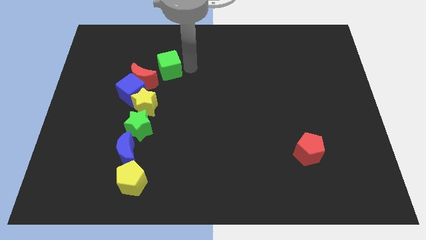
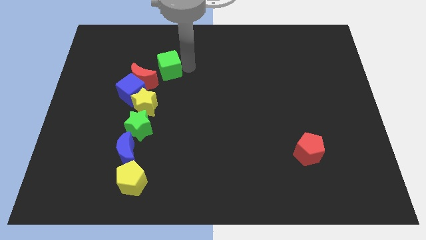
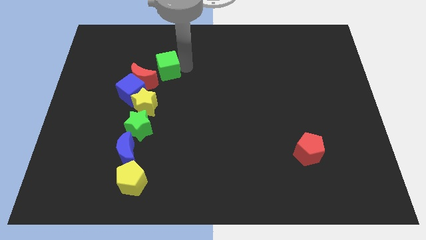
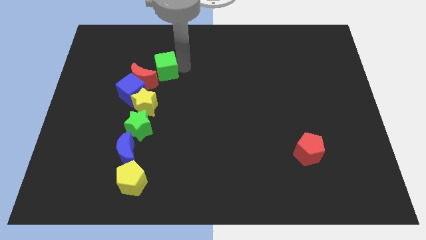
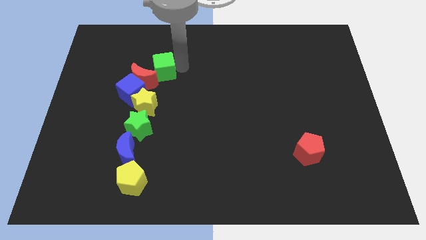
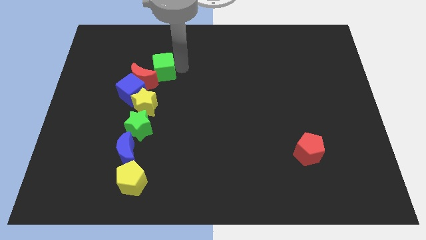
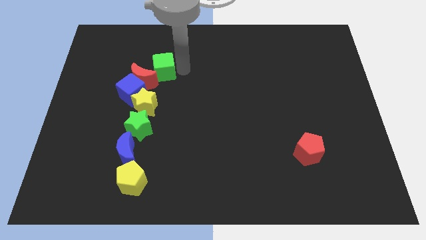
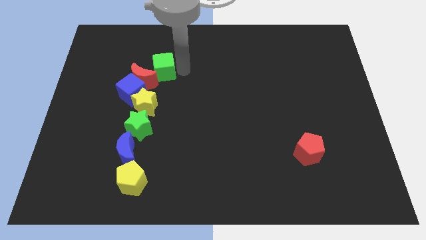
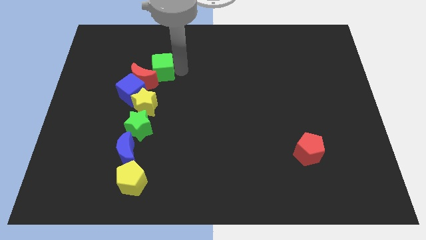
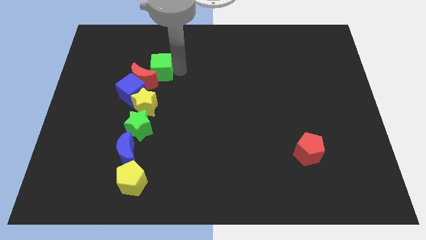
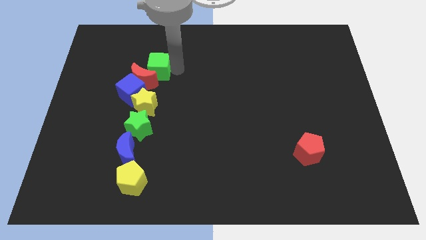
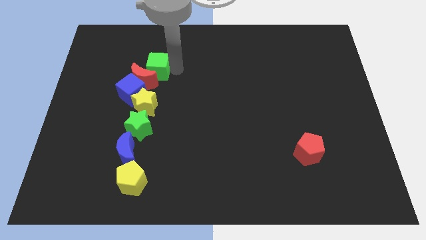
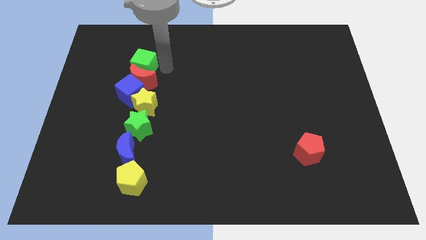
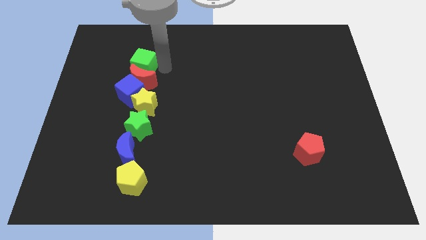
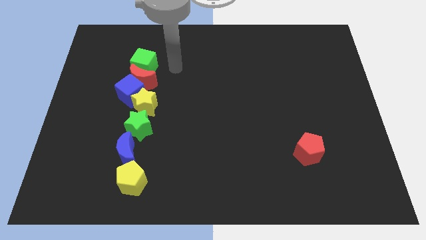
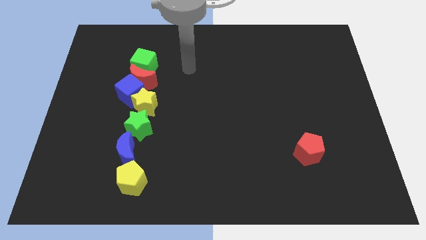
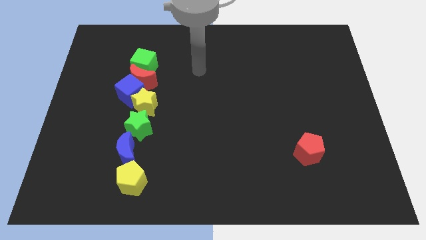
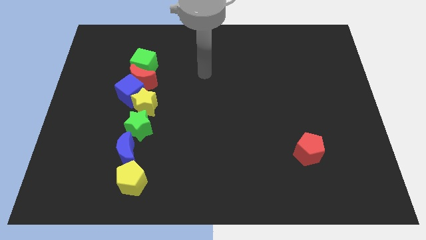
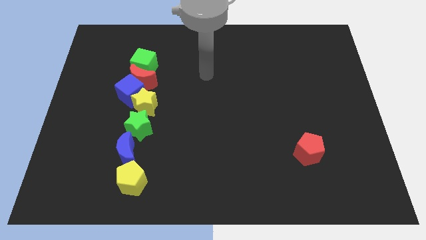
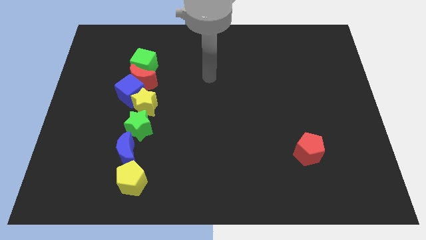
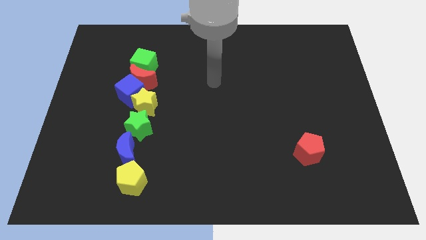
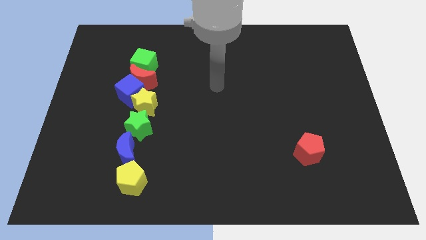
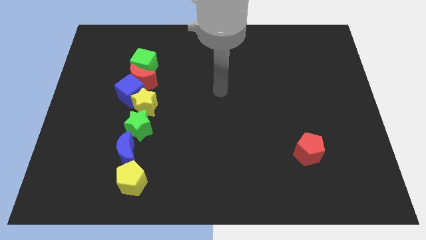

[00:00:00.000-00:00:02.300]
move the green cube above the red pentagon

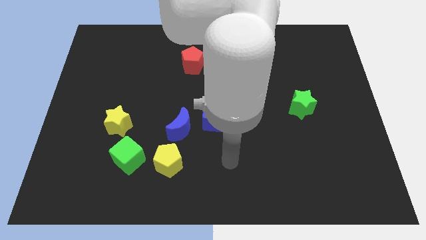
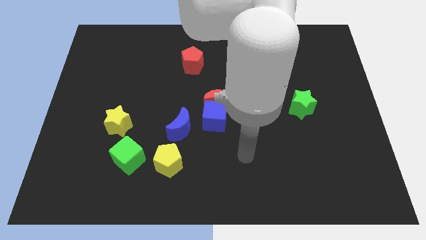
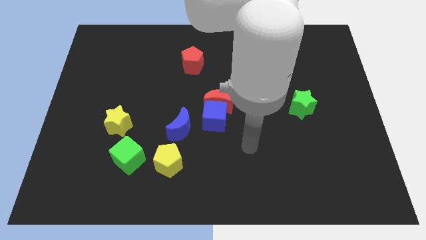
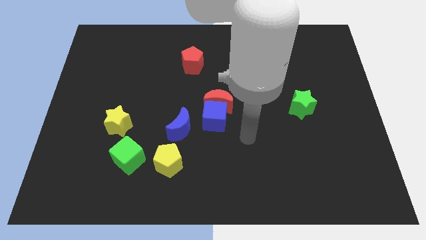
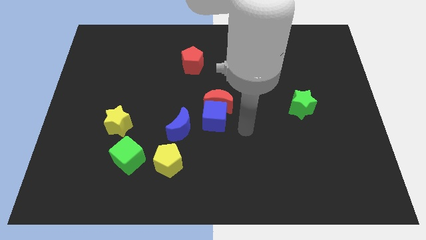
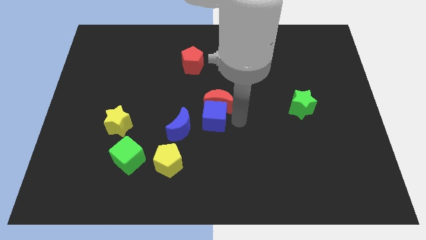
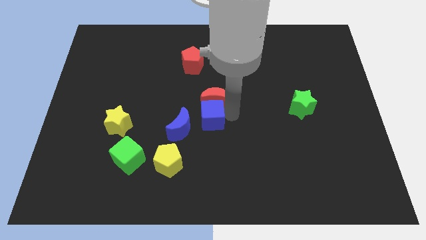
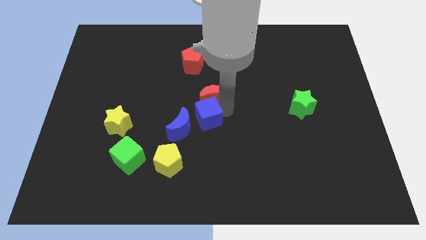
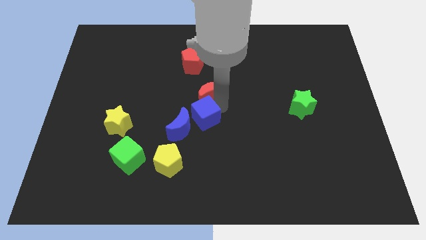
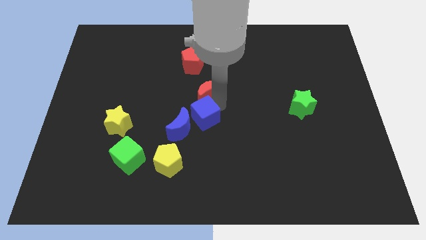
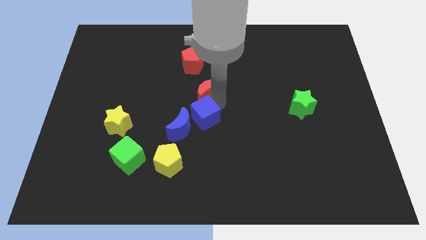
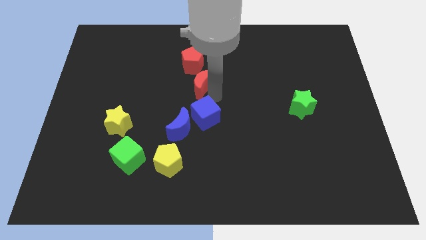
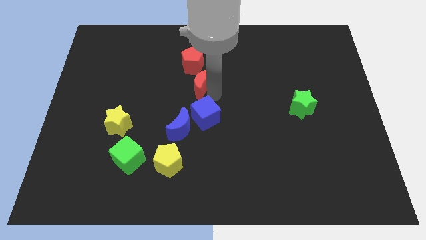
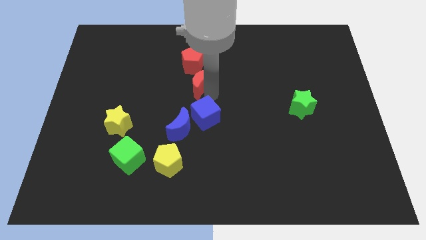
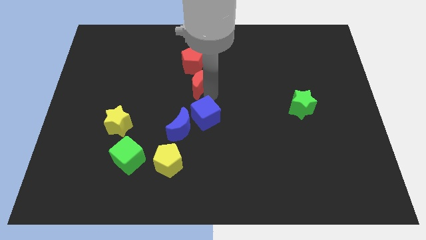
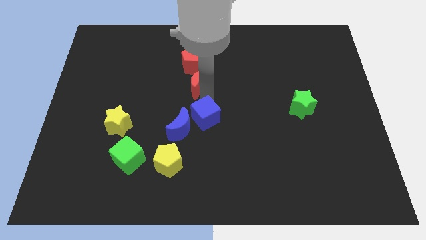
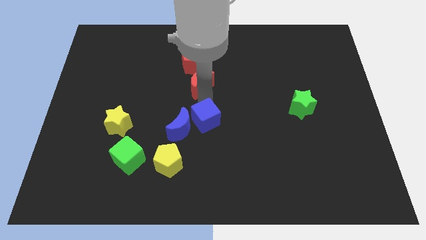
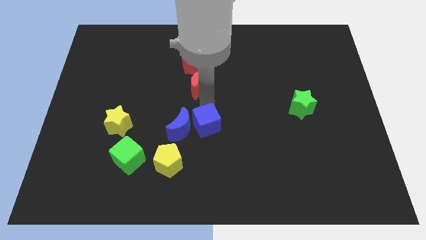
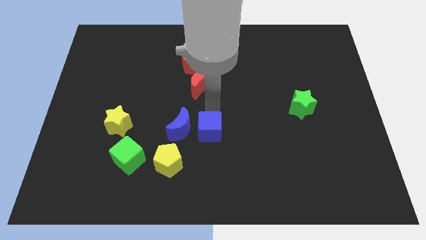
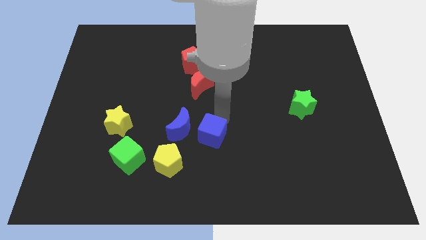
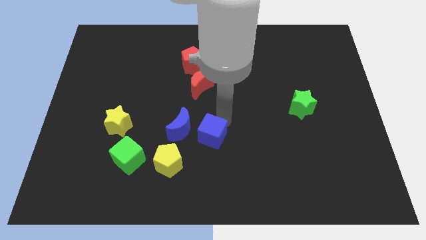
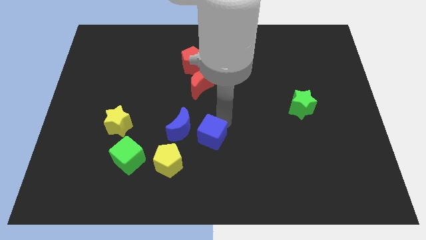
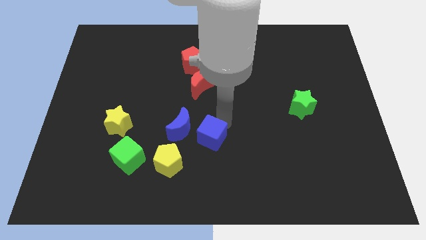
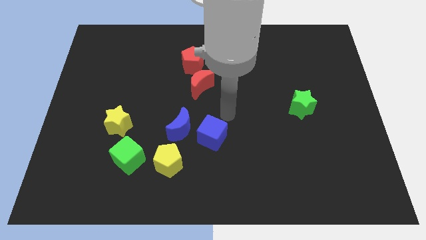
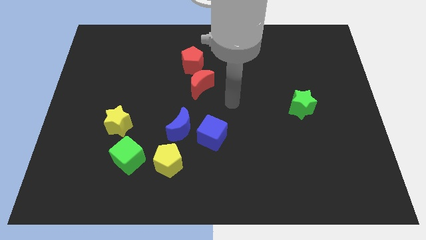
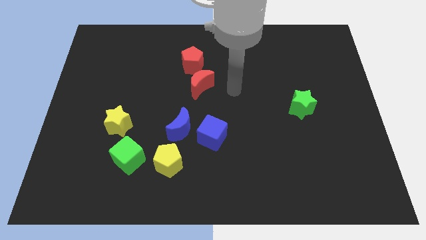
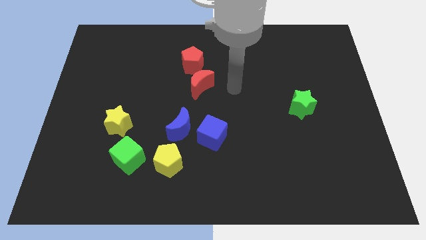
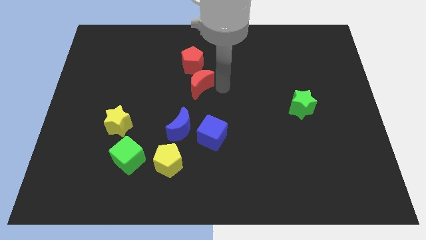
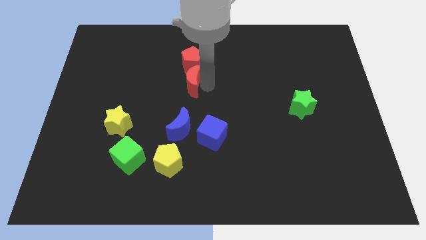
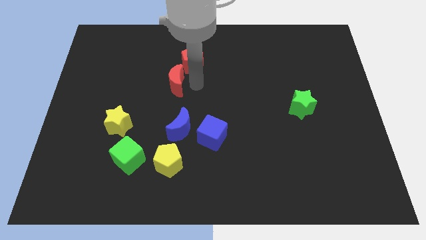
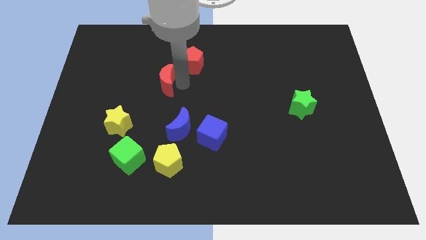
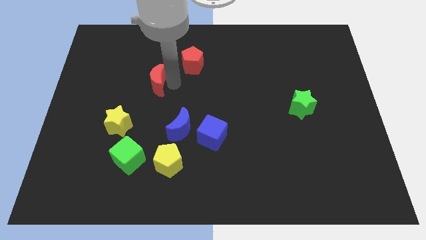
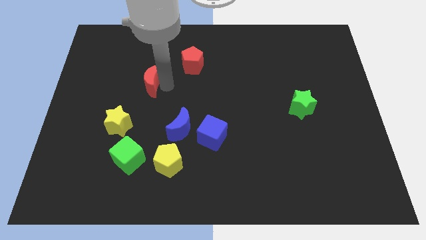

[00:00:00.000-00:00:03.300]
put the red moon diagonally top left to the blue cube

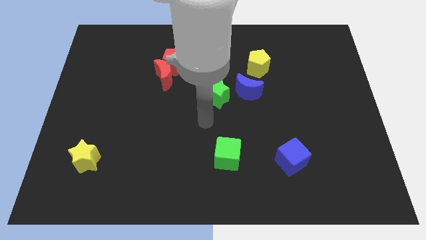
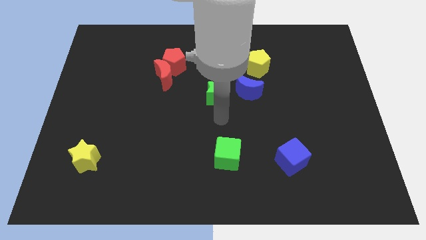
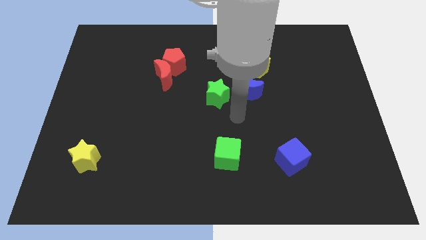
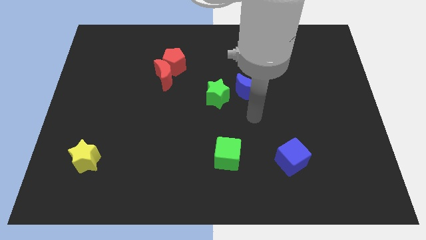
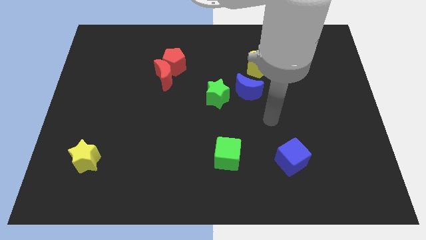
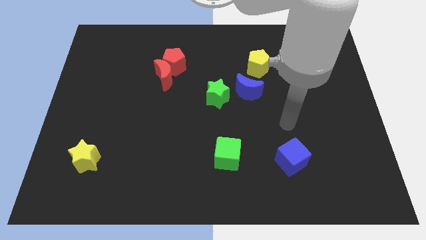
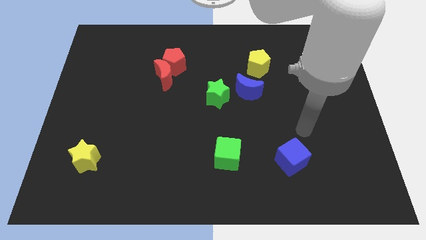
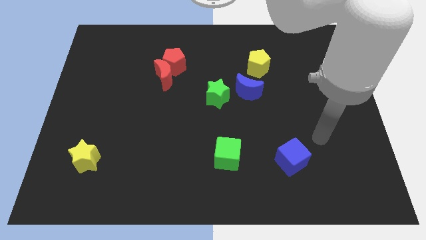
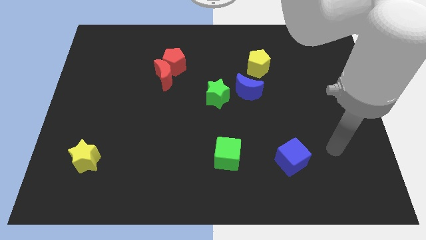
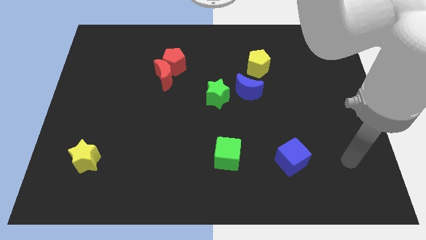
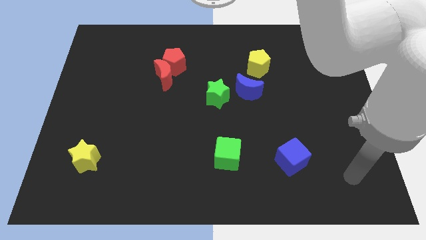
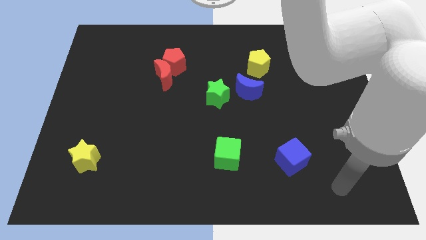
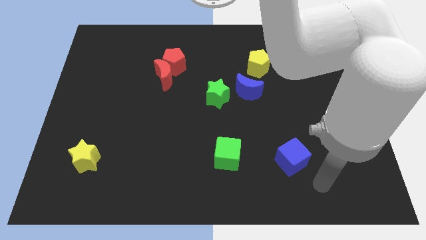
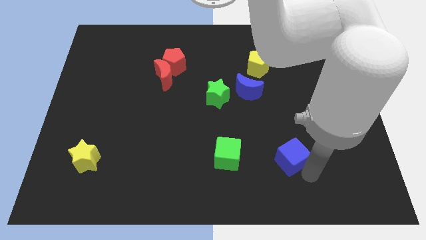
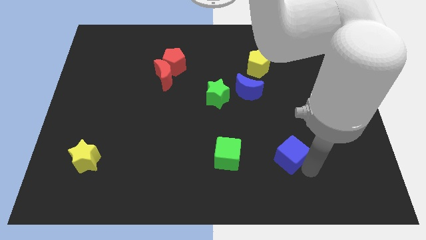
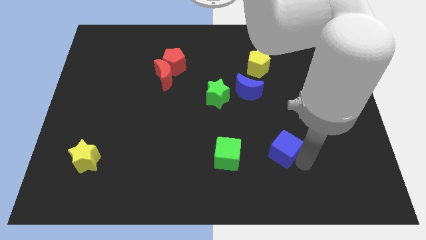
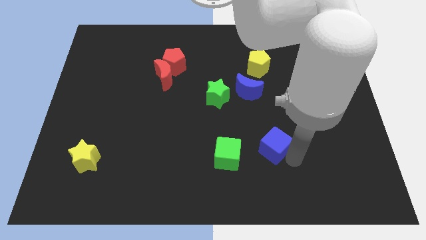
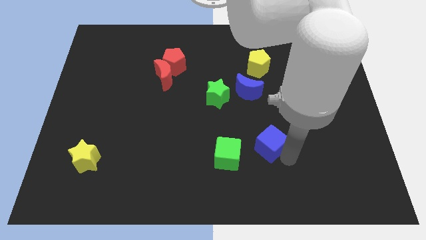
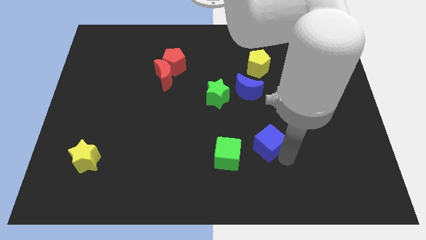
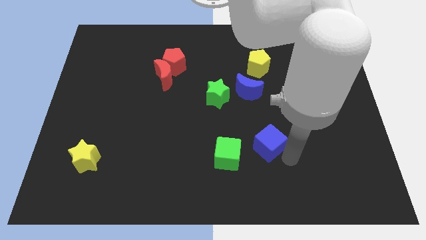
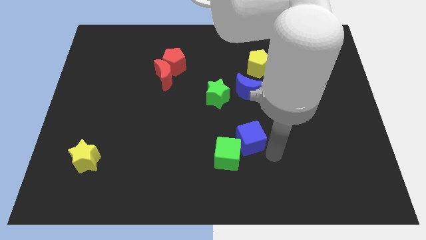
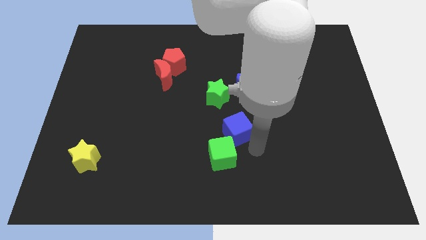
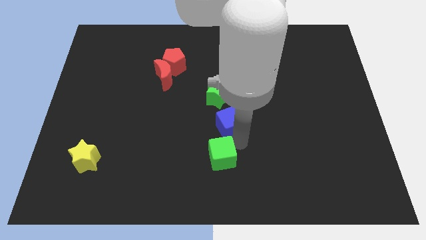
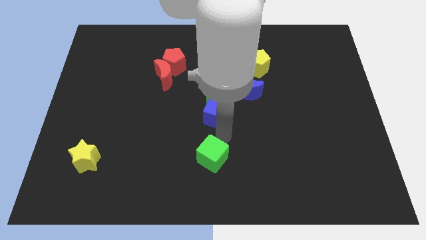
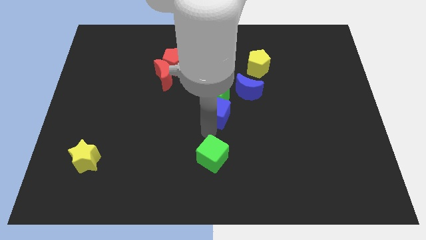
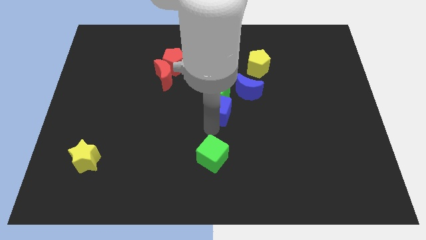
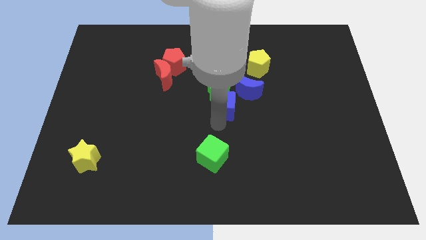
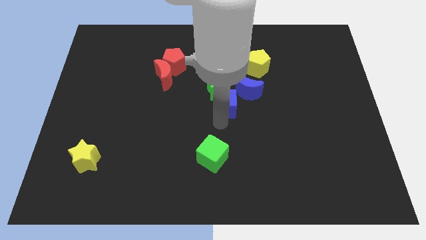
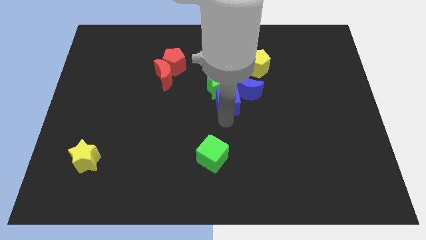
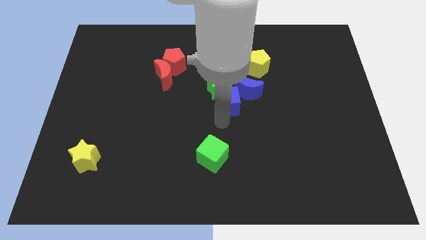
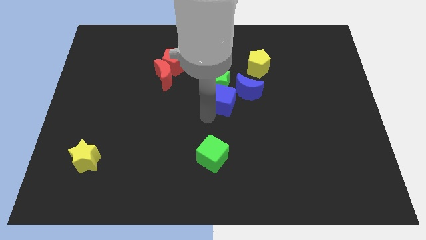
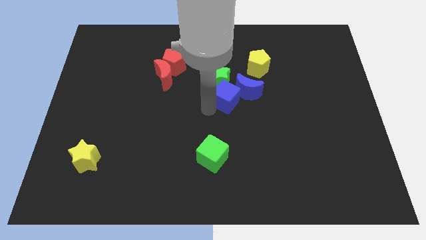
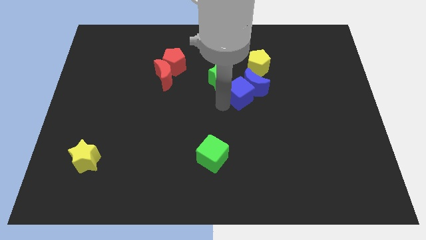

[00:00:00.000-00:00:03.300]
move the blue cube into the blue moon

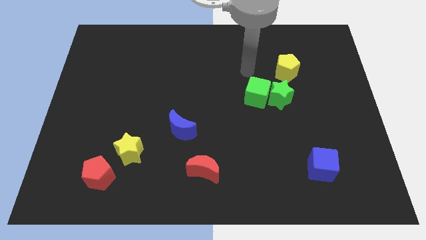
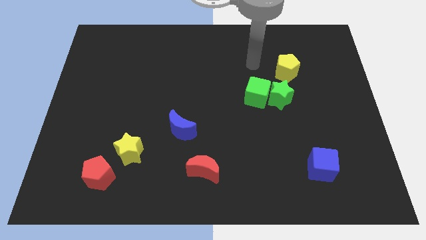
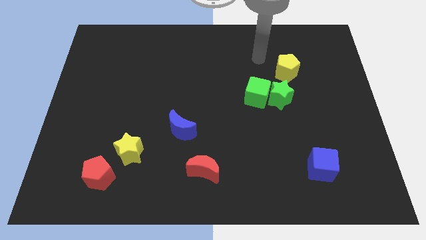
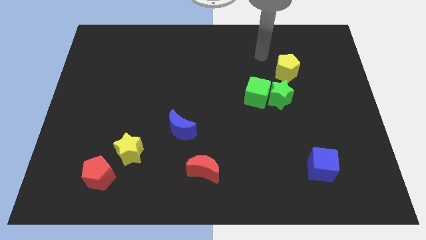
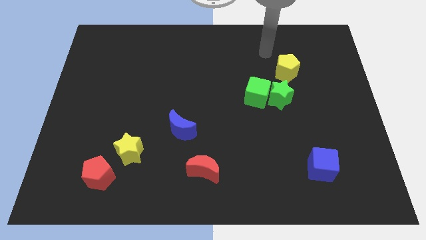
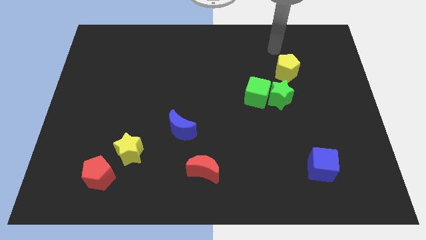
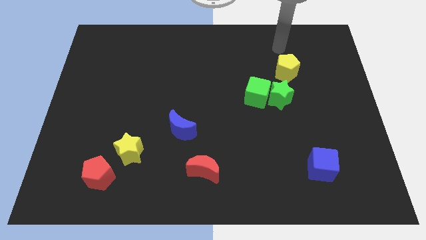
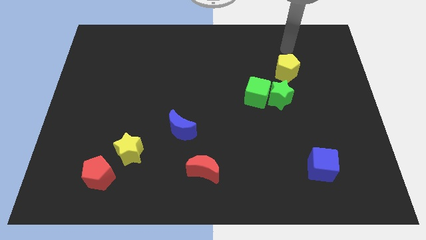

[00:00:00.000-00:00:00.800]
place arm above yellow pentagon
